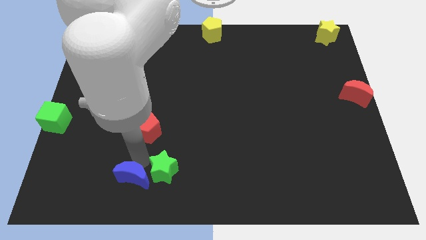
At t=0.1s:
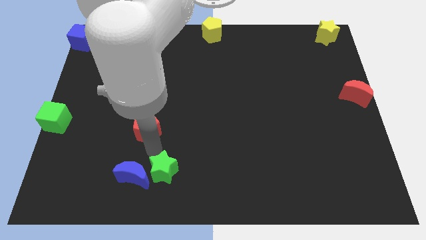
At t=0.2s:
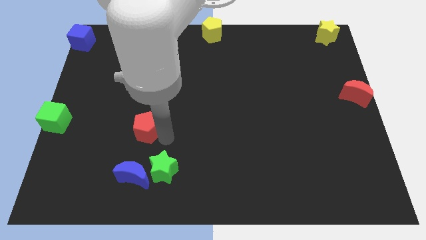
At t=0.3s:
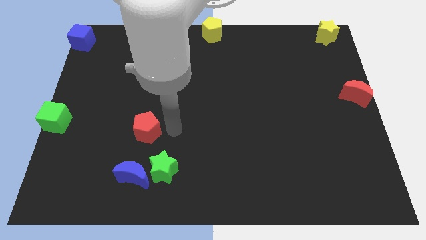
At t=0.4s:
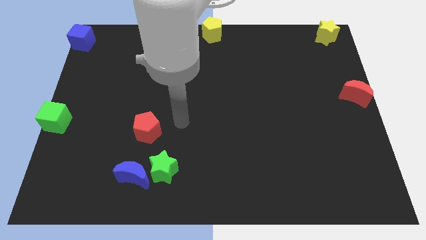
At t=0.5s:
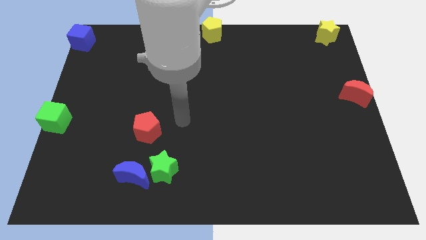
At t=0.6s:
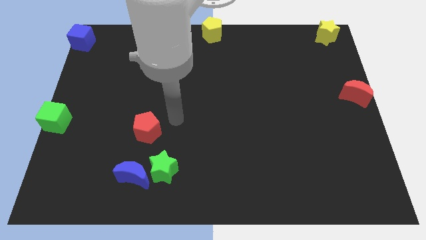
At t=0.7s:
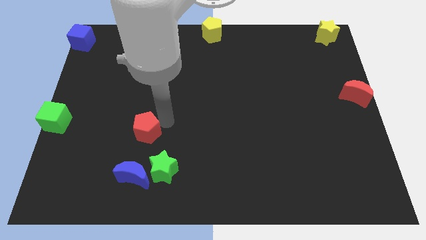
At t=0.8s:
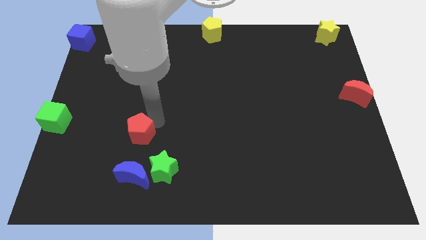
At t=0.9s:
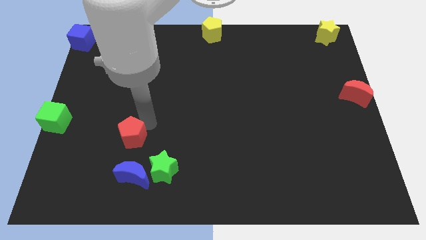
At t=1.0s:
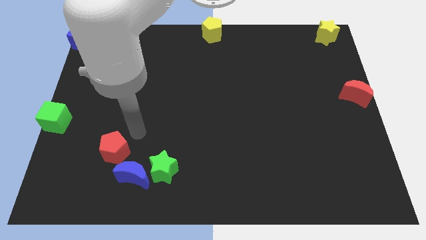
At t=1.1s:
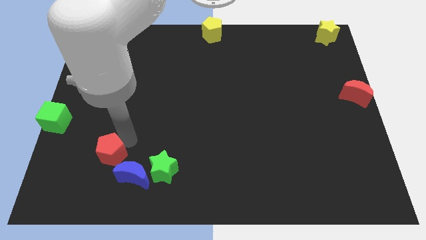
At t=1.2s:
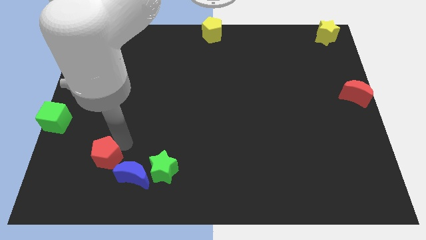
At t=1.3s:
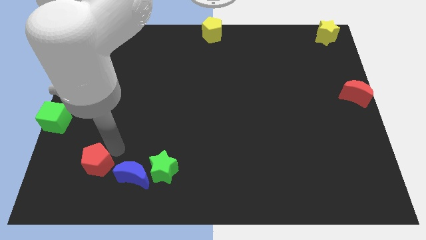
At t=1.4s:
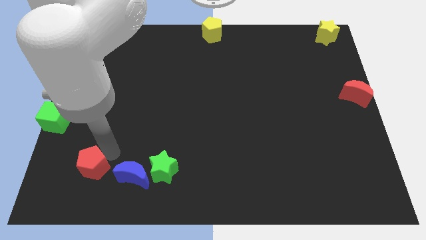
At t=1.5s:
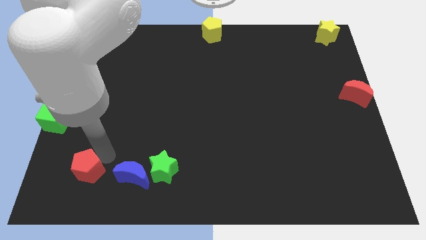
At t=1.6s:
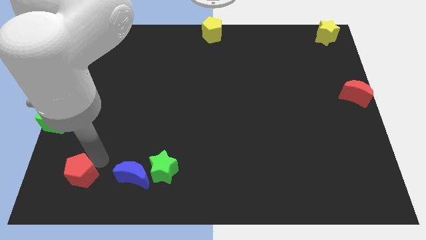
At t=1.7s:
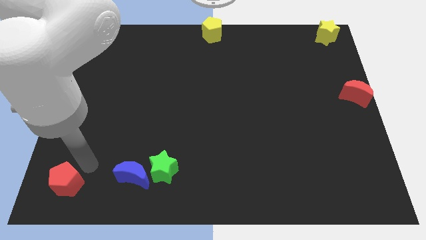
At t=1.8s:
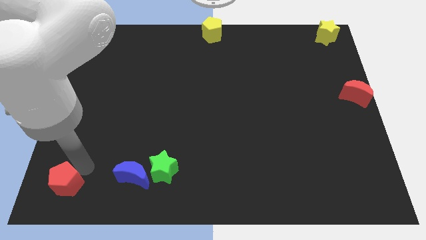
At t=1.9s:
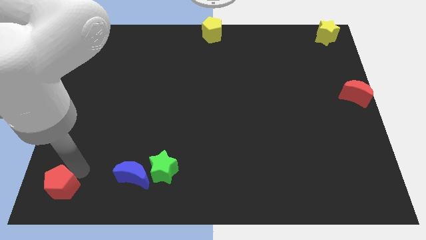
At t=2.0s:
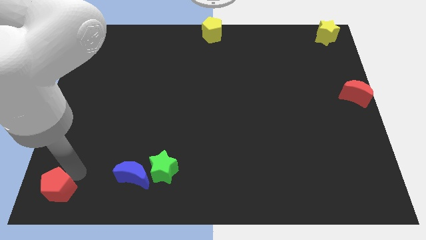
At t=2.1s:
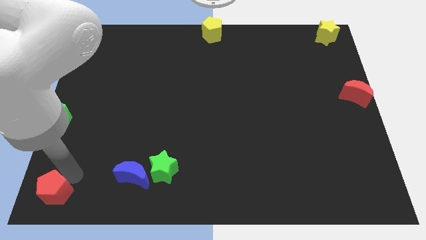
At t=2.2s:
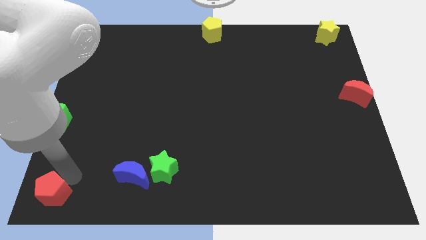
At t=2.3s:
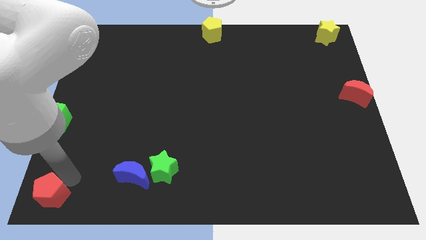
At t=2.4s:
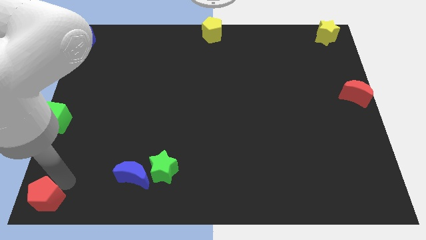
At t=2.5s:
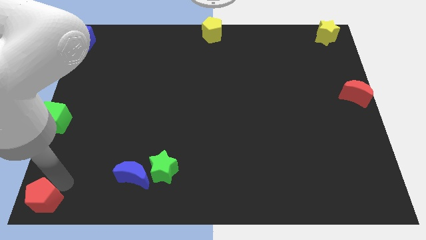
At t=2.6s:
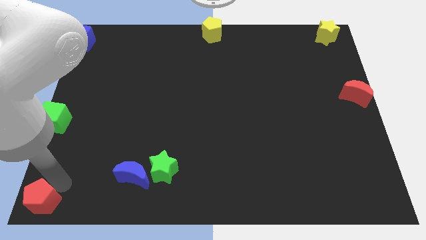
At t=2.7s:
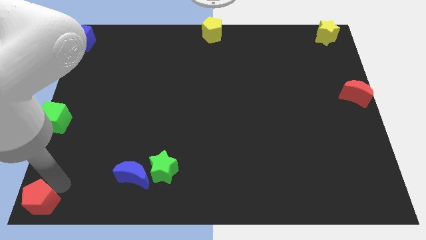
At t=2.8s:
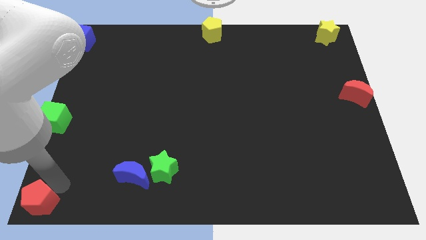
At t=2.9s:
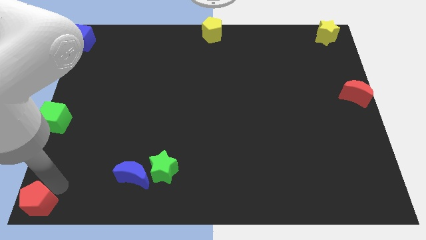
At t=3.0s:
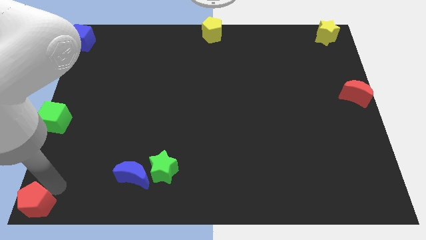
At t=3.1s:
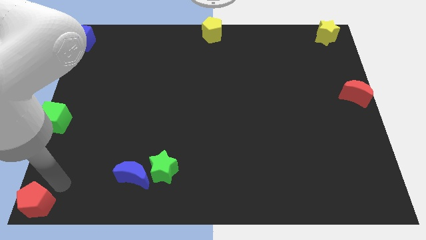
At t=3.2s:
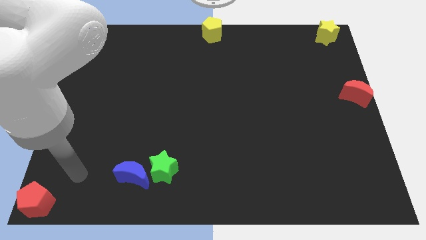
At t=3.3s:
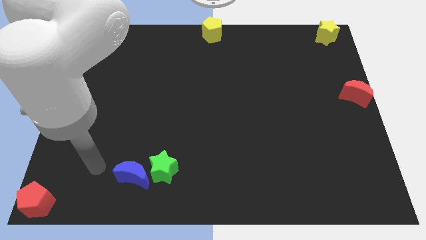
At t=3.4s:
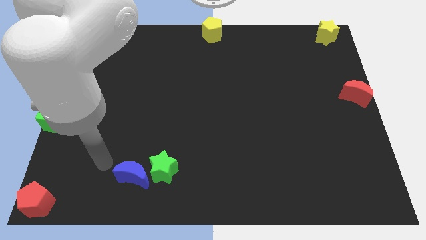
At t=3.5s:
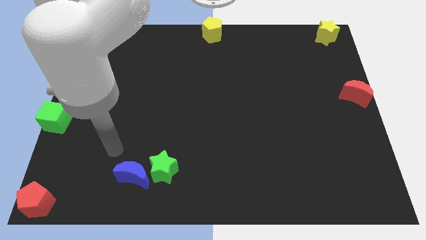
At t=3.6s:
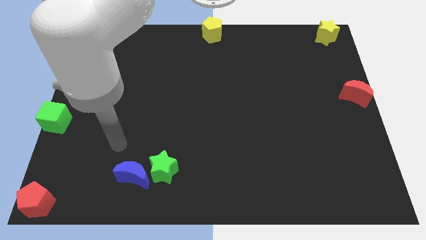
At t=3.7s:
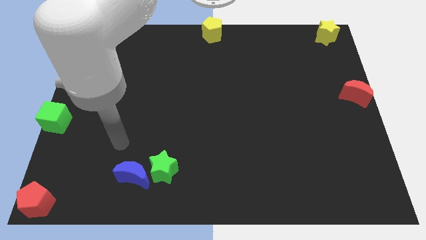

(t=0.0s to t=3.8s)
push the red pentagon to the bottom left corner of the board

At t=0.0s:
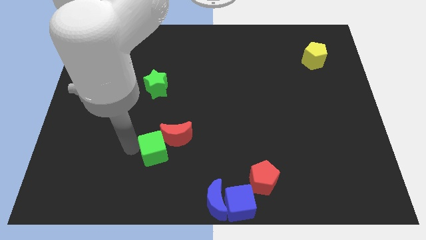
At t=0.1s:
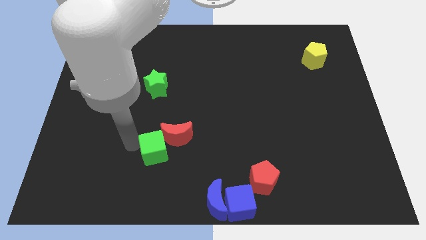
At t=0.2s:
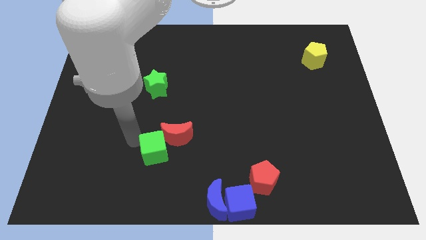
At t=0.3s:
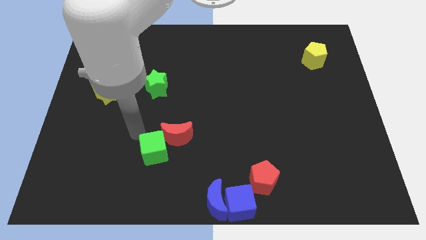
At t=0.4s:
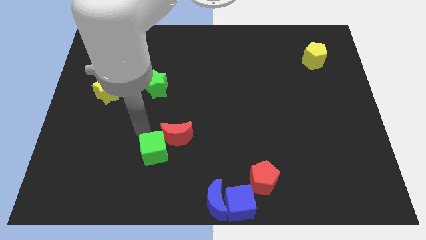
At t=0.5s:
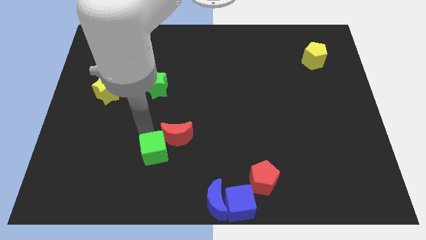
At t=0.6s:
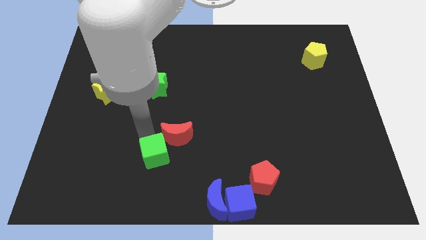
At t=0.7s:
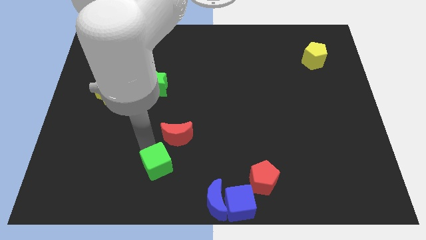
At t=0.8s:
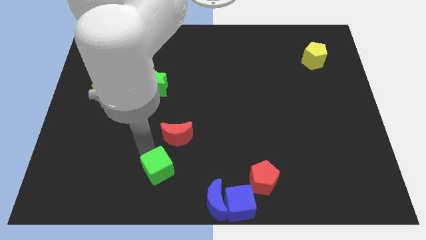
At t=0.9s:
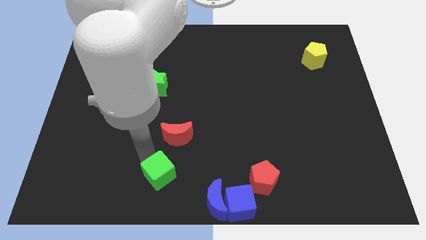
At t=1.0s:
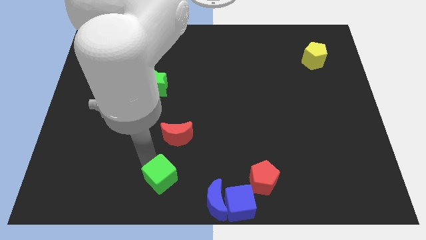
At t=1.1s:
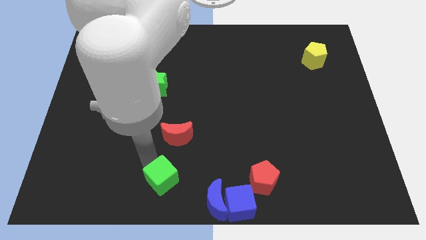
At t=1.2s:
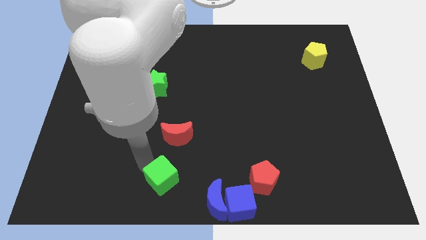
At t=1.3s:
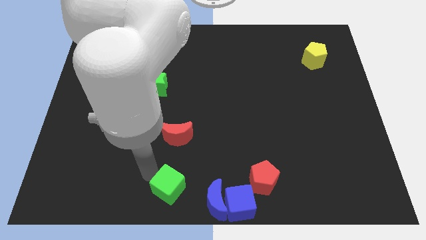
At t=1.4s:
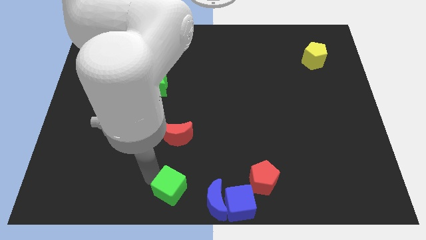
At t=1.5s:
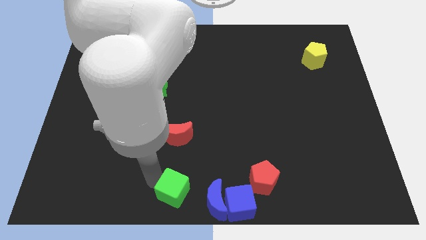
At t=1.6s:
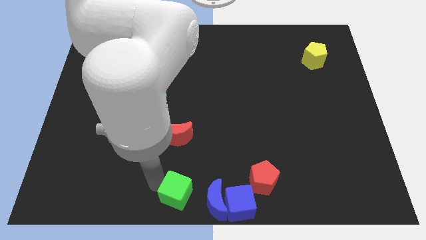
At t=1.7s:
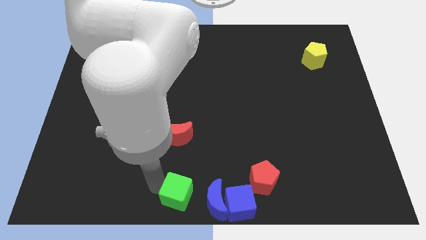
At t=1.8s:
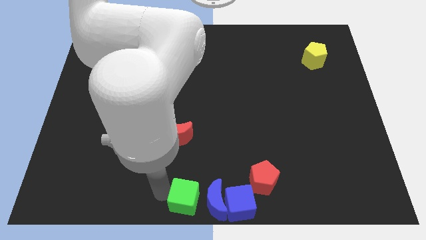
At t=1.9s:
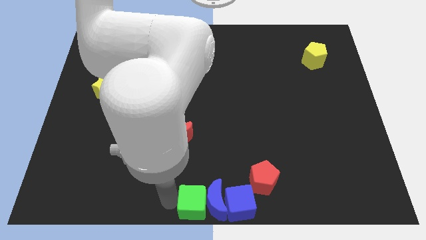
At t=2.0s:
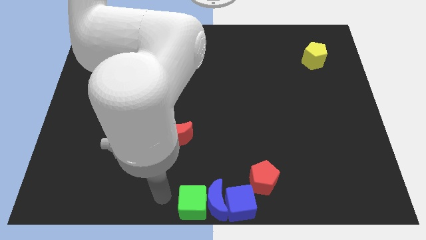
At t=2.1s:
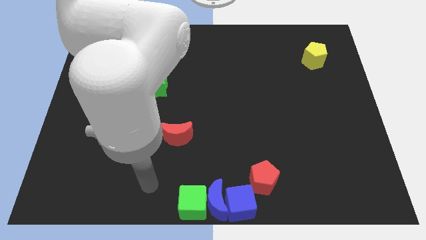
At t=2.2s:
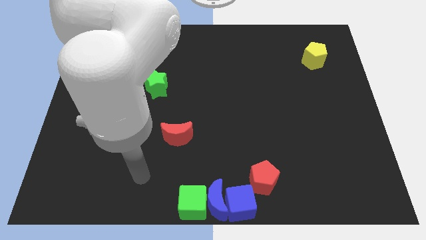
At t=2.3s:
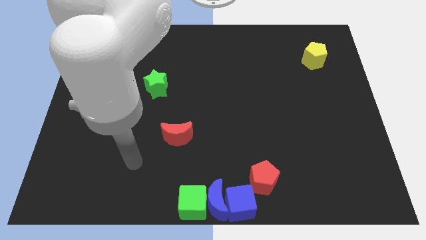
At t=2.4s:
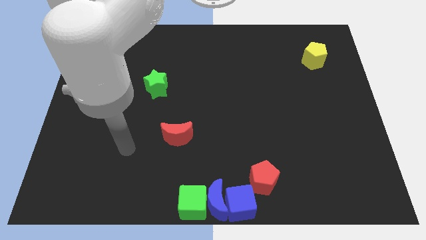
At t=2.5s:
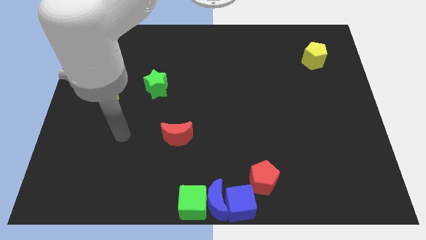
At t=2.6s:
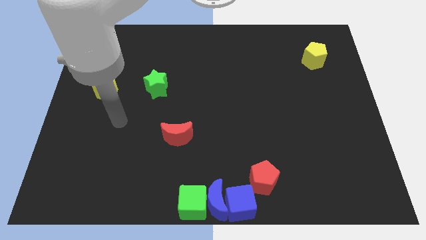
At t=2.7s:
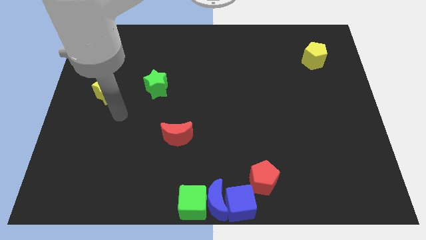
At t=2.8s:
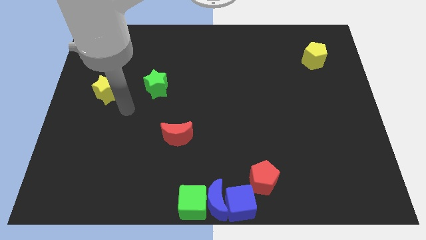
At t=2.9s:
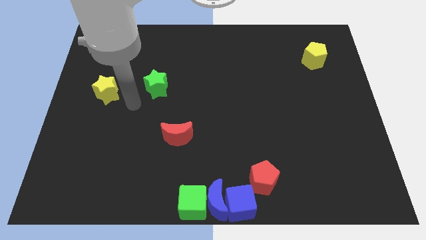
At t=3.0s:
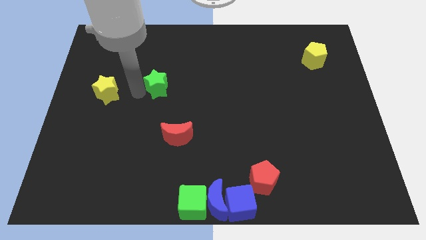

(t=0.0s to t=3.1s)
place the green cube to the left of the blue crescent

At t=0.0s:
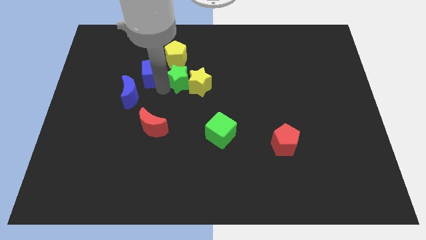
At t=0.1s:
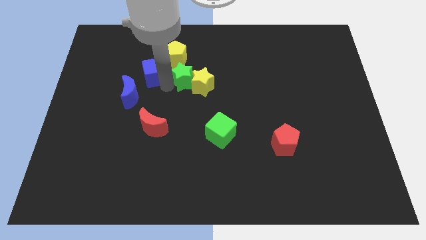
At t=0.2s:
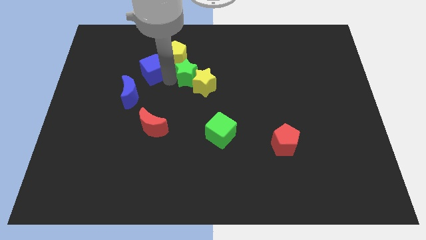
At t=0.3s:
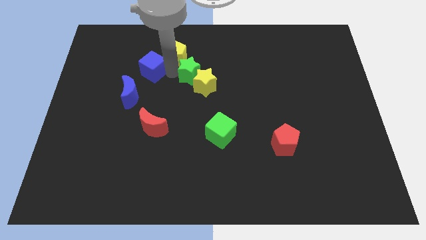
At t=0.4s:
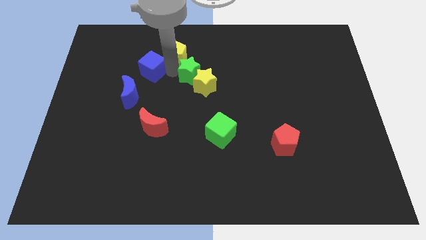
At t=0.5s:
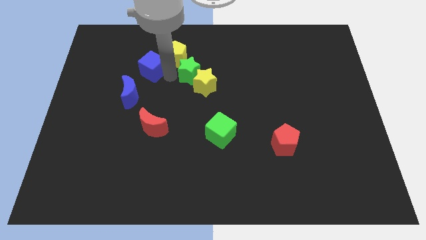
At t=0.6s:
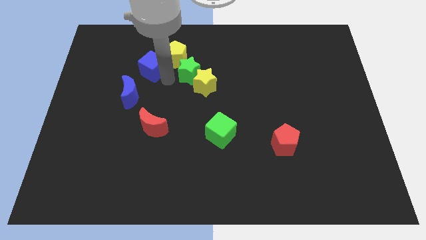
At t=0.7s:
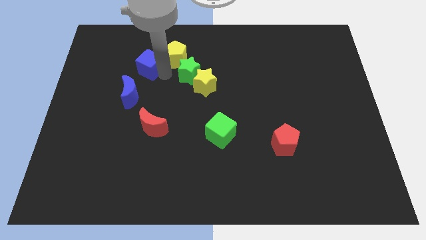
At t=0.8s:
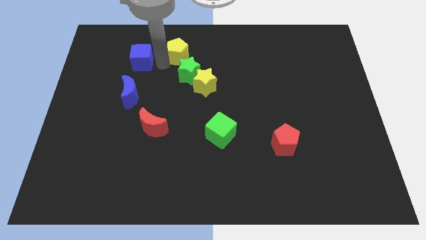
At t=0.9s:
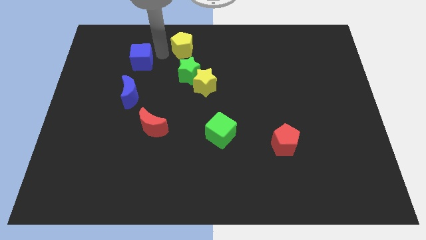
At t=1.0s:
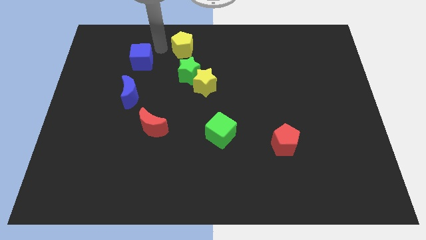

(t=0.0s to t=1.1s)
separate the green star and the blue cube

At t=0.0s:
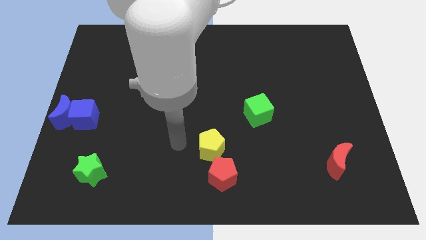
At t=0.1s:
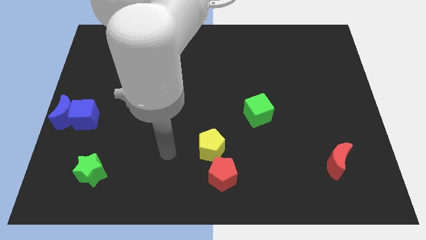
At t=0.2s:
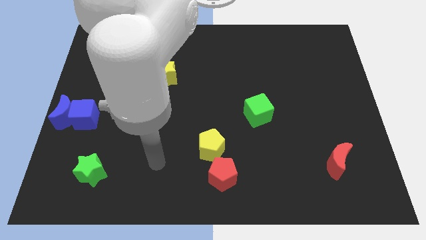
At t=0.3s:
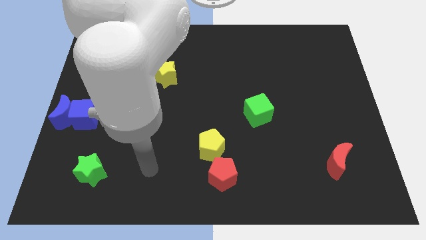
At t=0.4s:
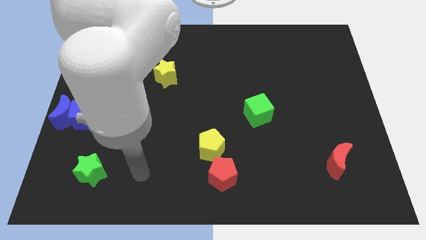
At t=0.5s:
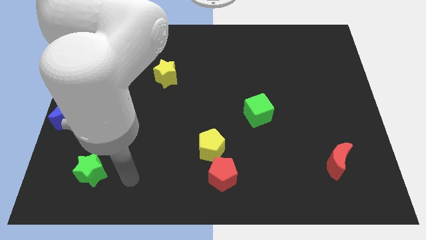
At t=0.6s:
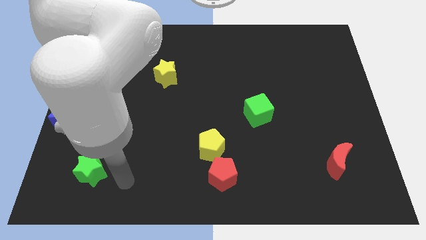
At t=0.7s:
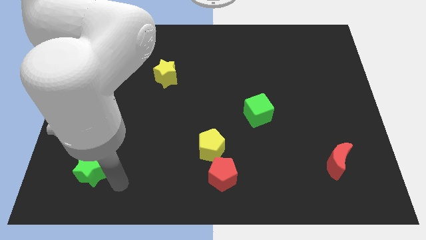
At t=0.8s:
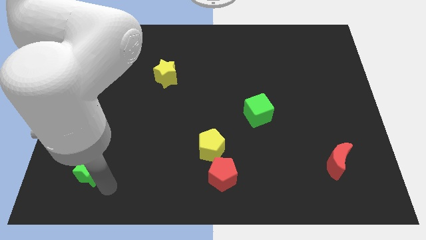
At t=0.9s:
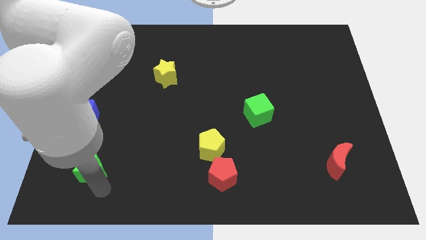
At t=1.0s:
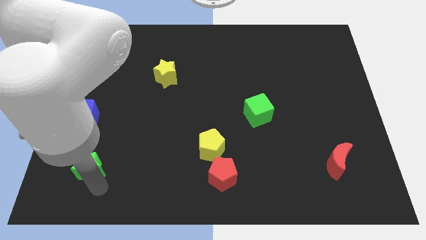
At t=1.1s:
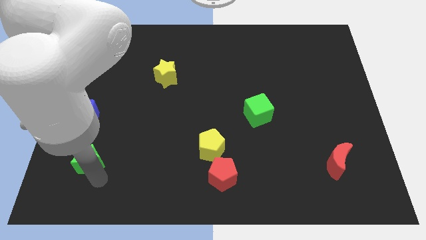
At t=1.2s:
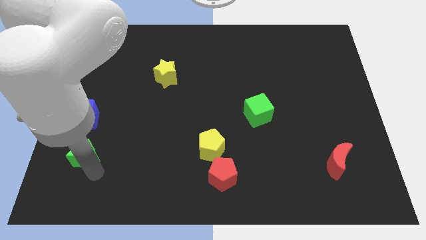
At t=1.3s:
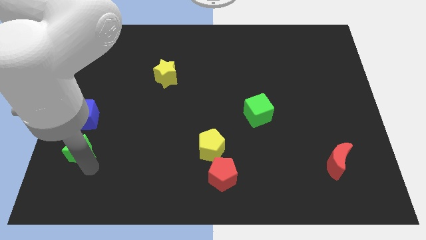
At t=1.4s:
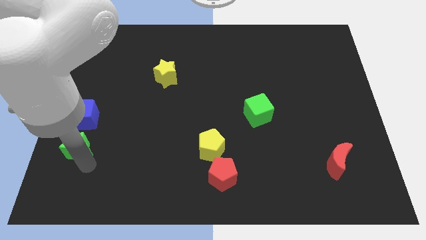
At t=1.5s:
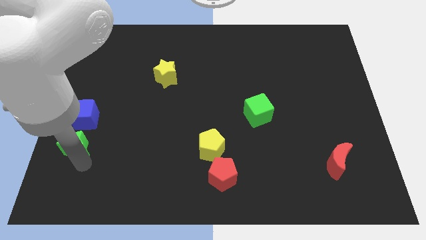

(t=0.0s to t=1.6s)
move the green star to the bottom of the blue cube
